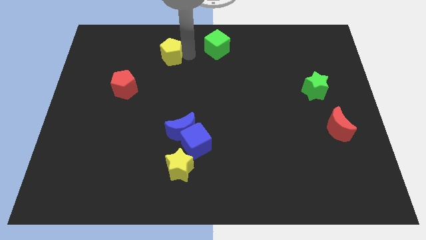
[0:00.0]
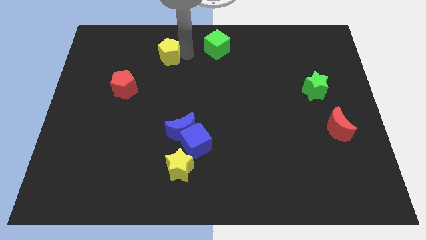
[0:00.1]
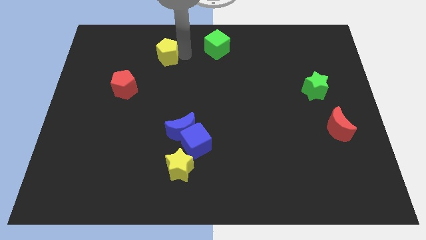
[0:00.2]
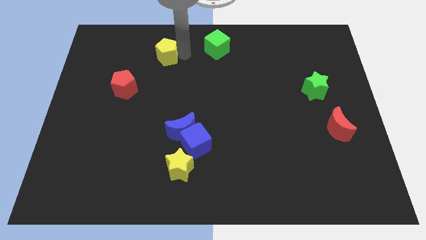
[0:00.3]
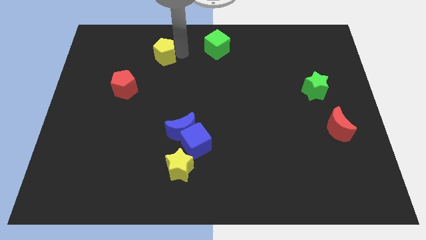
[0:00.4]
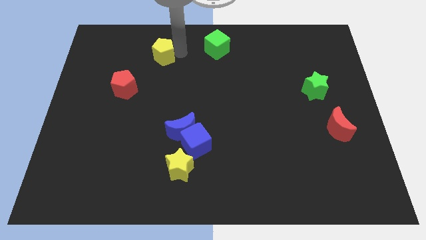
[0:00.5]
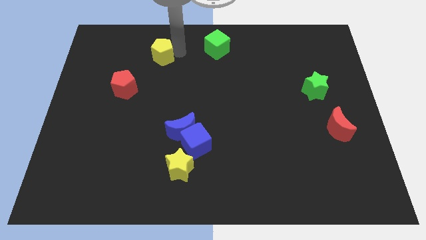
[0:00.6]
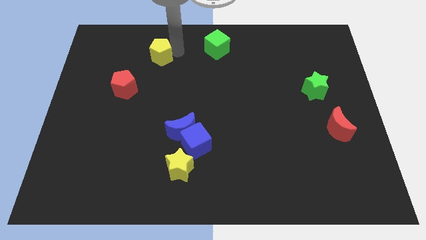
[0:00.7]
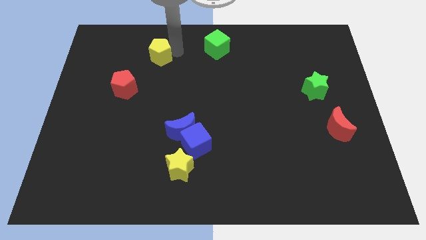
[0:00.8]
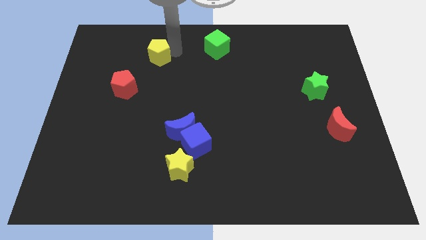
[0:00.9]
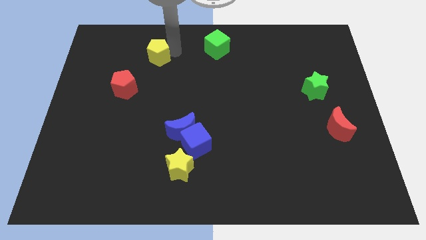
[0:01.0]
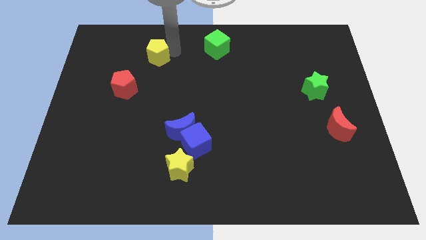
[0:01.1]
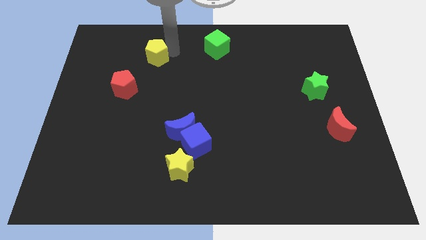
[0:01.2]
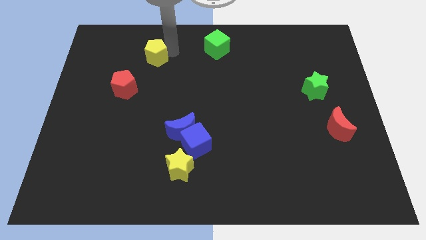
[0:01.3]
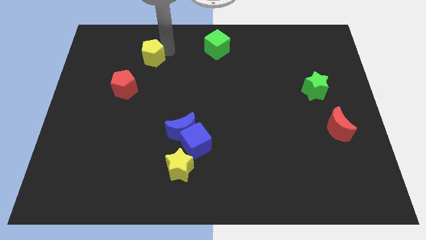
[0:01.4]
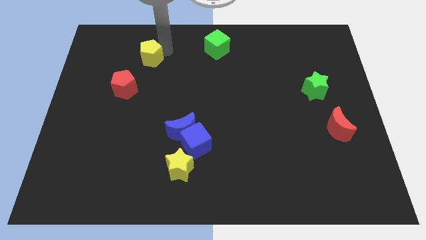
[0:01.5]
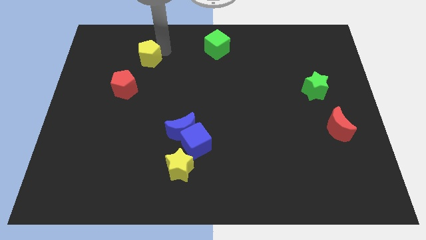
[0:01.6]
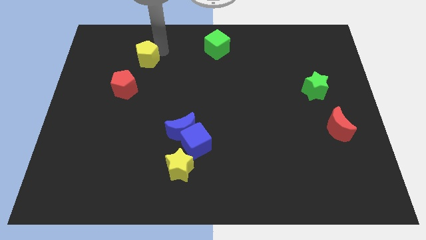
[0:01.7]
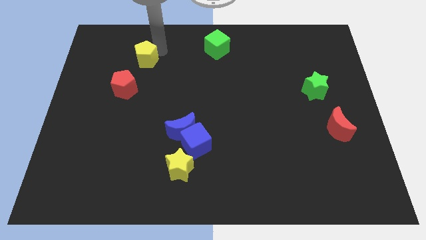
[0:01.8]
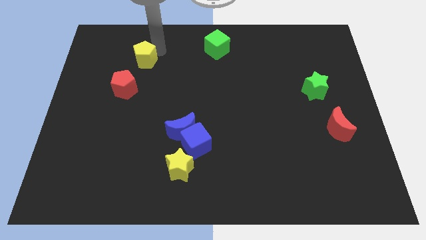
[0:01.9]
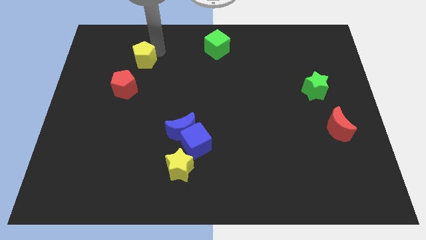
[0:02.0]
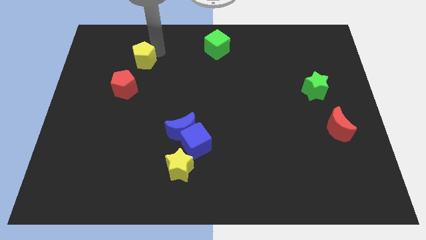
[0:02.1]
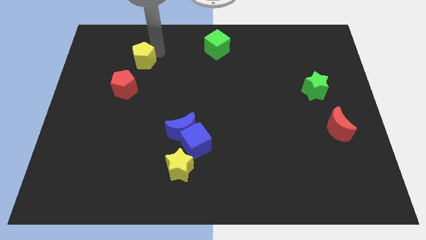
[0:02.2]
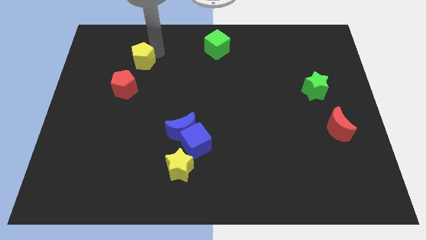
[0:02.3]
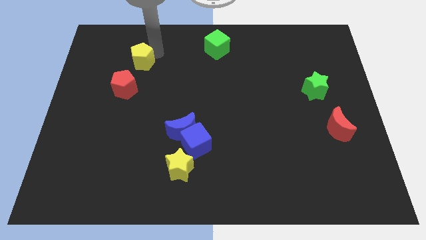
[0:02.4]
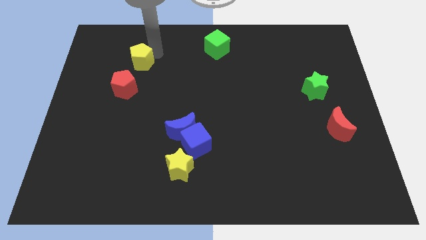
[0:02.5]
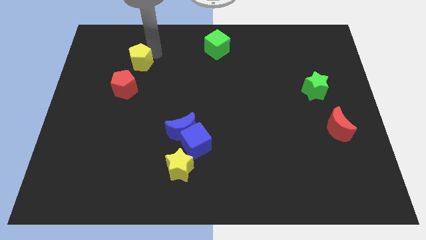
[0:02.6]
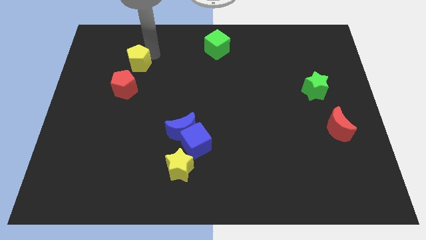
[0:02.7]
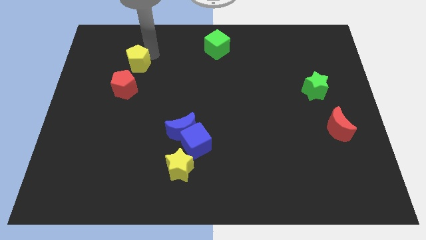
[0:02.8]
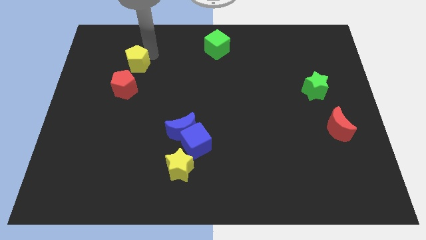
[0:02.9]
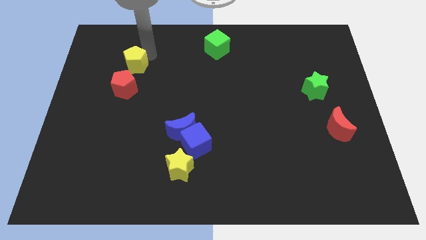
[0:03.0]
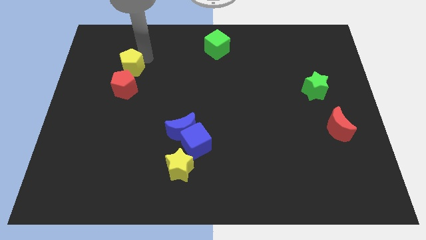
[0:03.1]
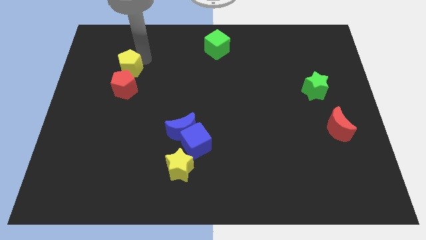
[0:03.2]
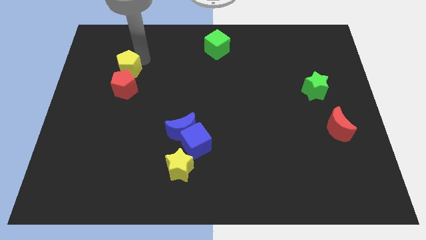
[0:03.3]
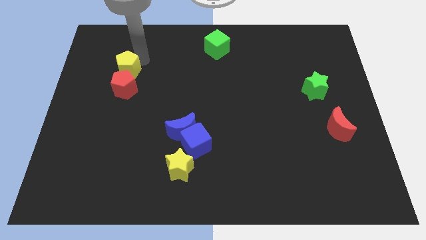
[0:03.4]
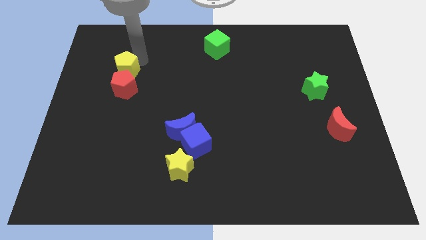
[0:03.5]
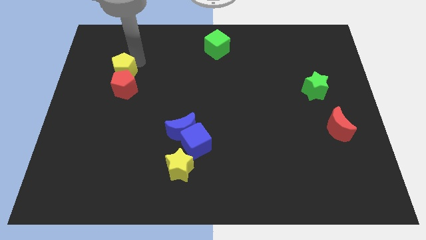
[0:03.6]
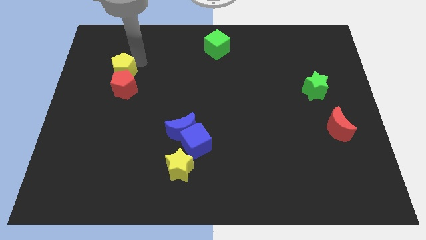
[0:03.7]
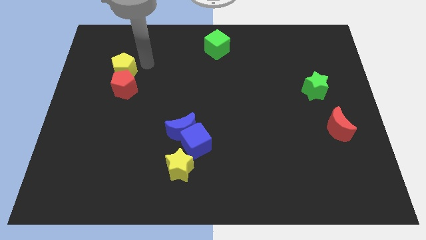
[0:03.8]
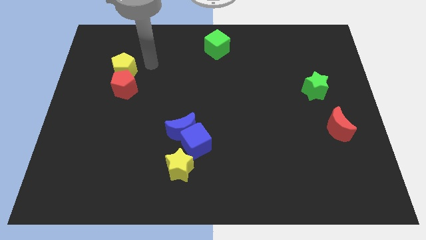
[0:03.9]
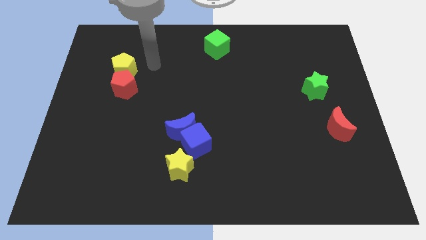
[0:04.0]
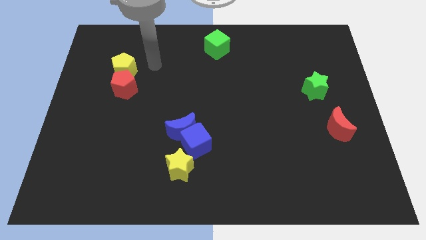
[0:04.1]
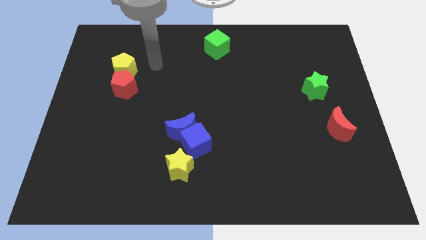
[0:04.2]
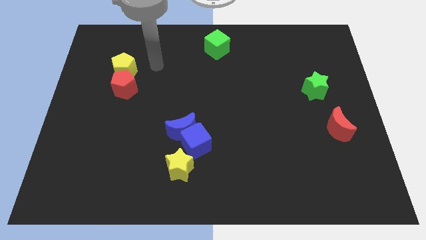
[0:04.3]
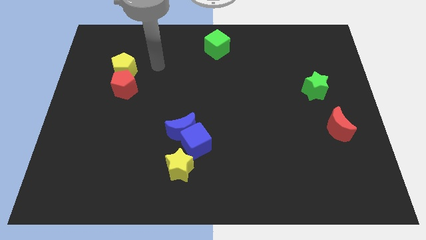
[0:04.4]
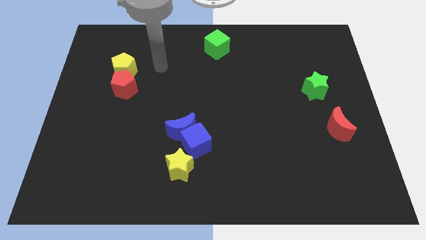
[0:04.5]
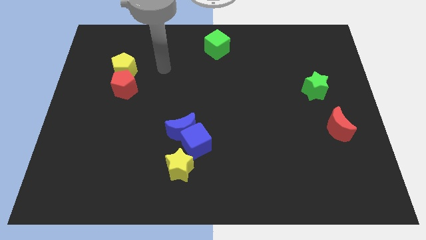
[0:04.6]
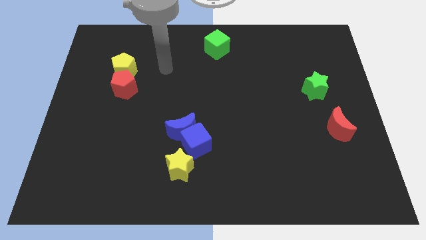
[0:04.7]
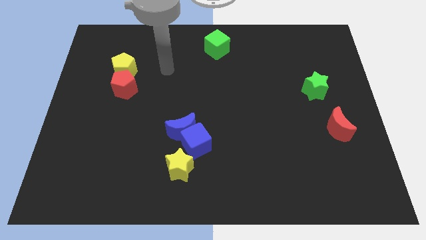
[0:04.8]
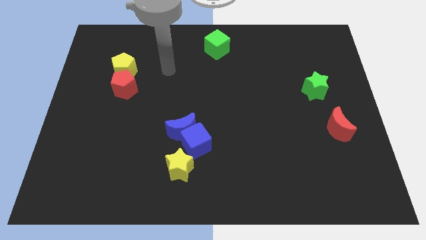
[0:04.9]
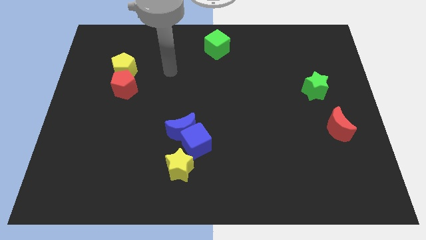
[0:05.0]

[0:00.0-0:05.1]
place yellow pentagon on top of red pentagon

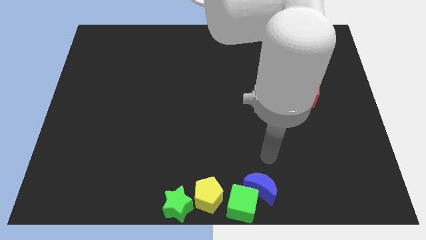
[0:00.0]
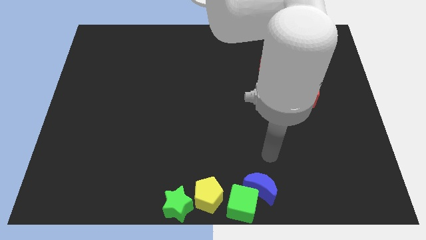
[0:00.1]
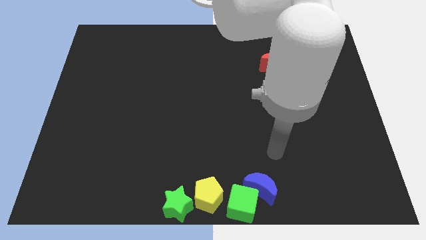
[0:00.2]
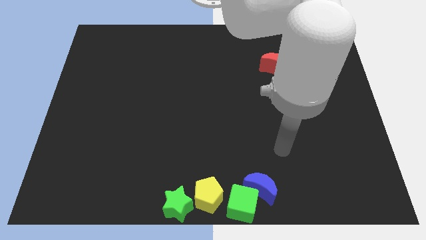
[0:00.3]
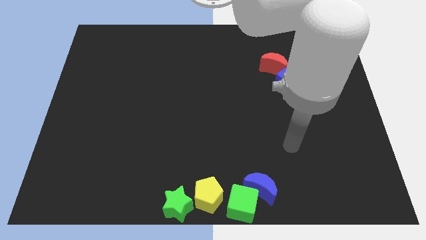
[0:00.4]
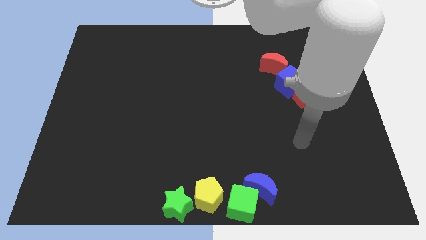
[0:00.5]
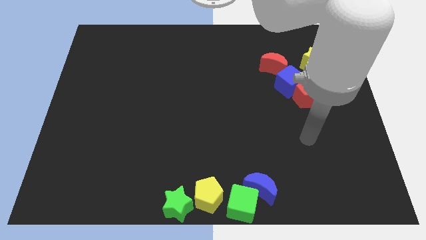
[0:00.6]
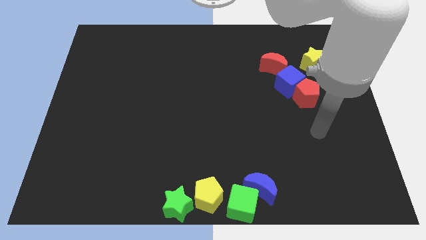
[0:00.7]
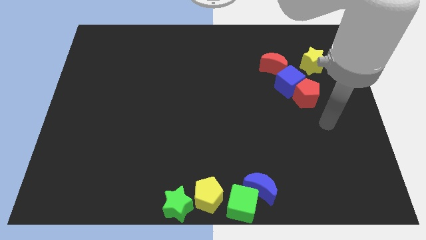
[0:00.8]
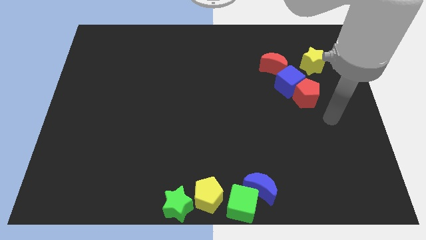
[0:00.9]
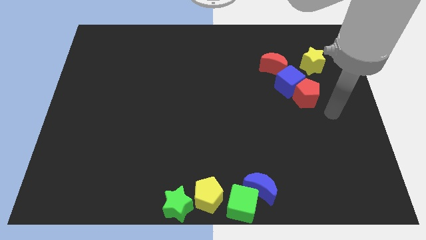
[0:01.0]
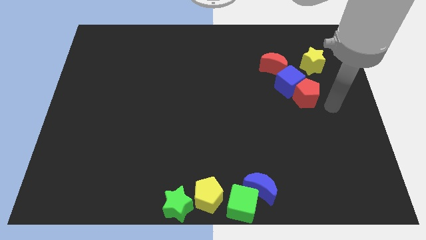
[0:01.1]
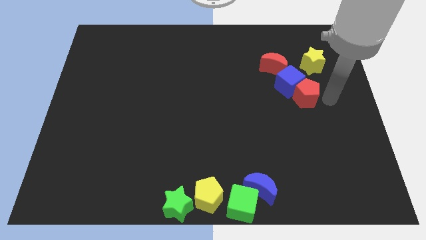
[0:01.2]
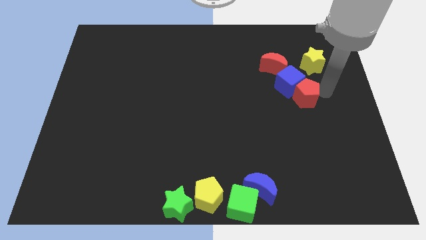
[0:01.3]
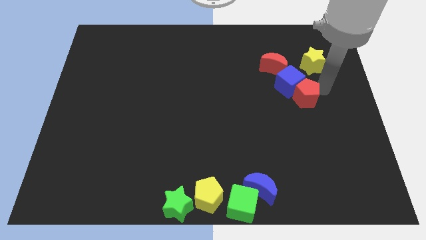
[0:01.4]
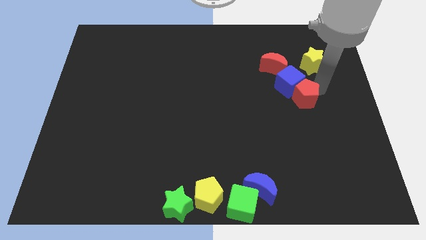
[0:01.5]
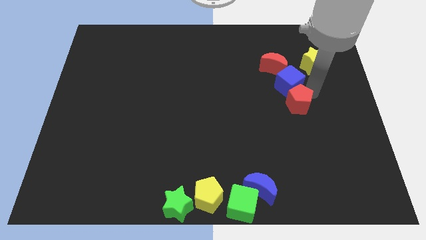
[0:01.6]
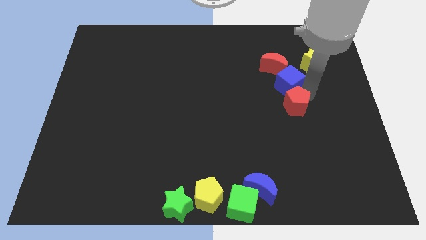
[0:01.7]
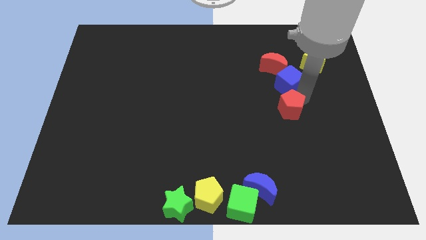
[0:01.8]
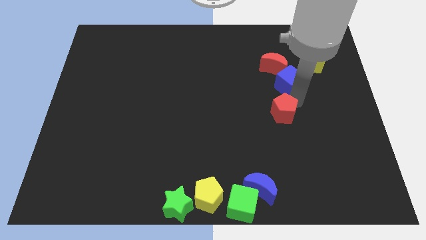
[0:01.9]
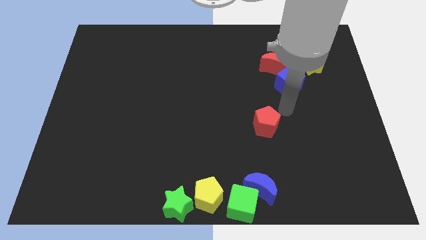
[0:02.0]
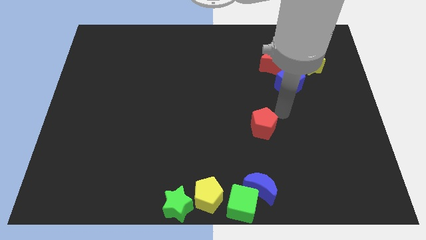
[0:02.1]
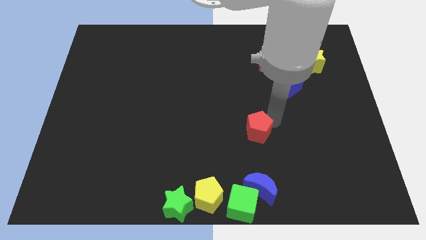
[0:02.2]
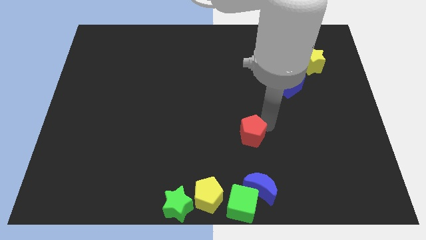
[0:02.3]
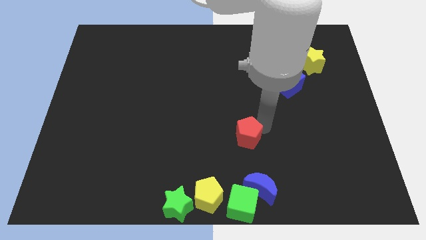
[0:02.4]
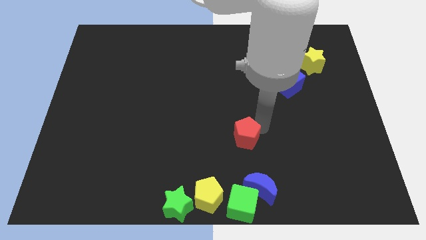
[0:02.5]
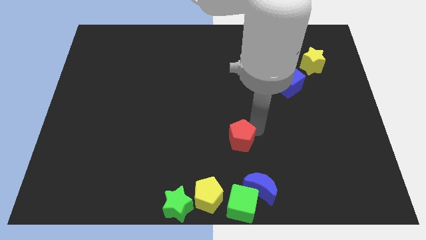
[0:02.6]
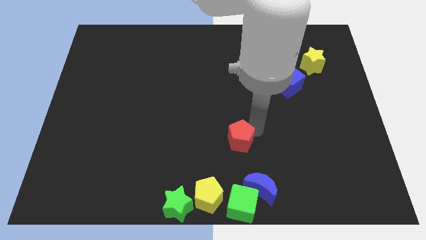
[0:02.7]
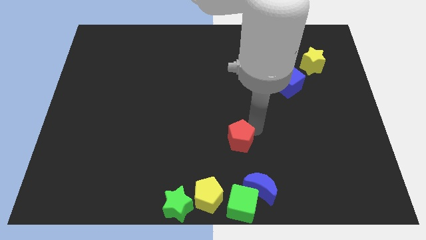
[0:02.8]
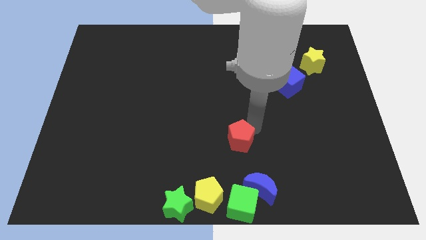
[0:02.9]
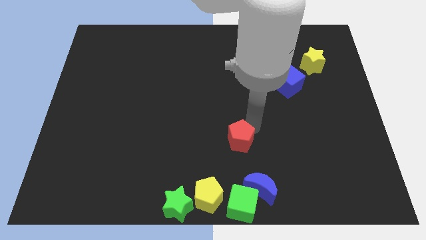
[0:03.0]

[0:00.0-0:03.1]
drag the red pentagon above the green cube

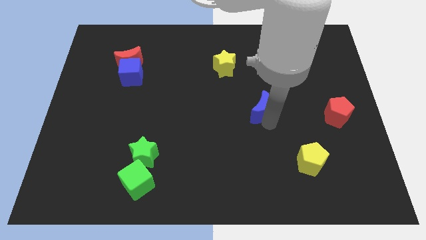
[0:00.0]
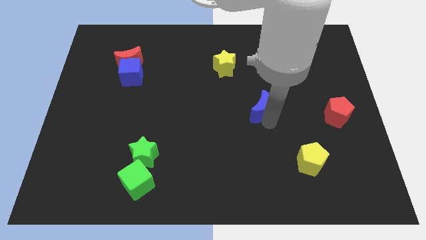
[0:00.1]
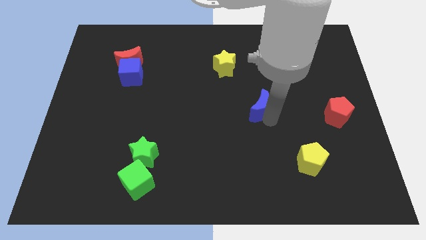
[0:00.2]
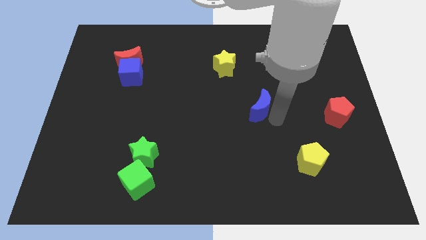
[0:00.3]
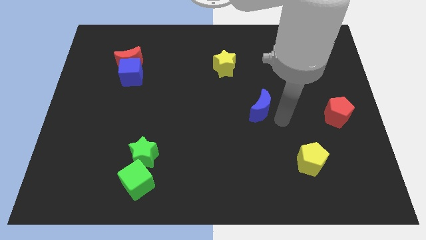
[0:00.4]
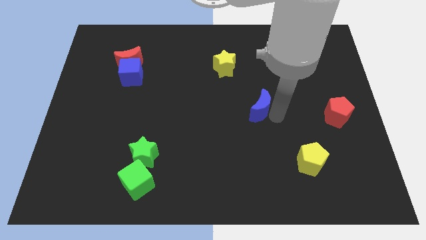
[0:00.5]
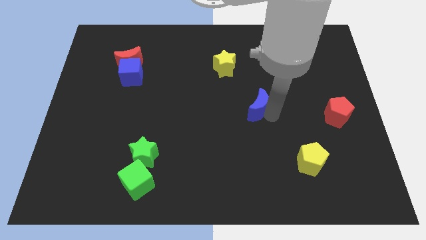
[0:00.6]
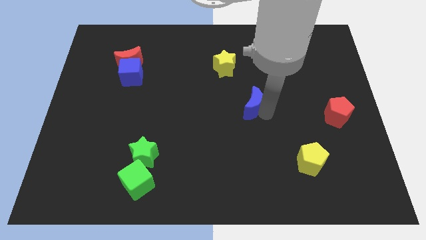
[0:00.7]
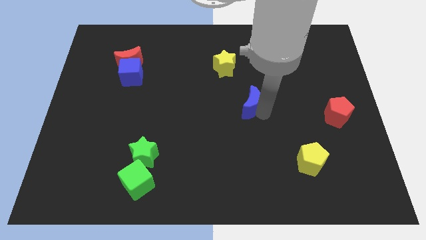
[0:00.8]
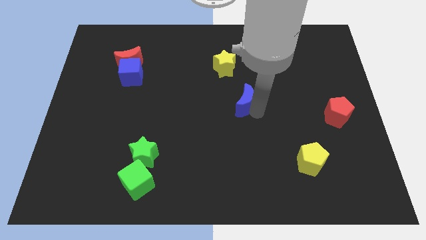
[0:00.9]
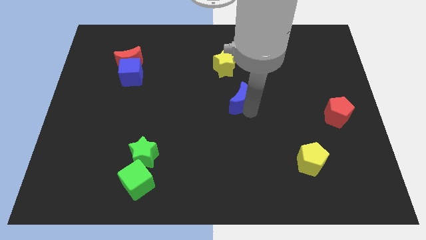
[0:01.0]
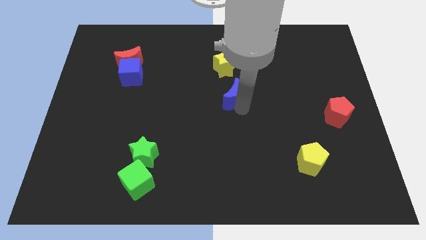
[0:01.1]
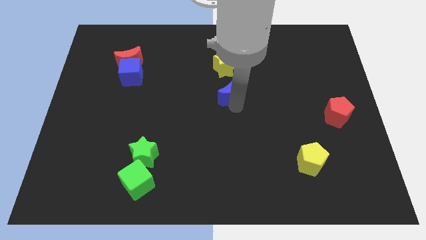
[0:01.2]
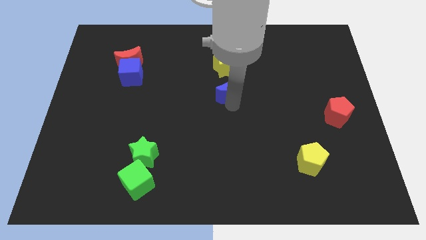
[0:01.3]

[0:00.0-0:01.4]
place blue moon to the bottom of yellow star
